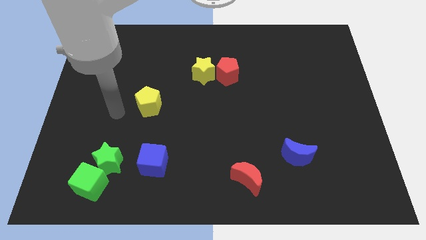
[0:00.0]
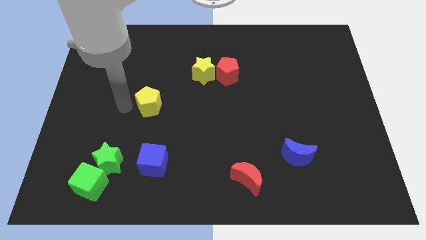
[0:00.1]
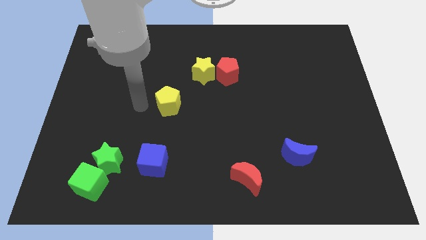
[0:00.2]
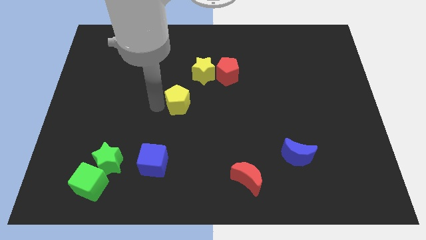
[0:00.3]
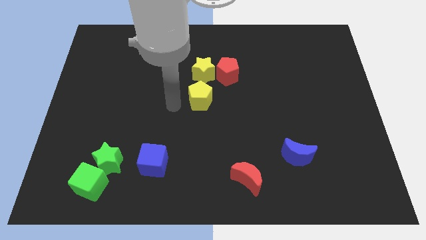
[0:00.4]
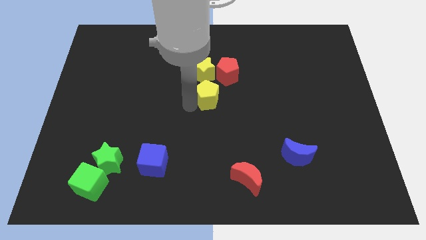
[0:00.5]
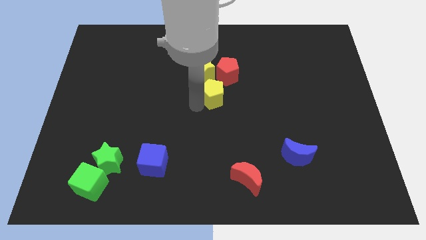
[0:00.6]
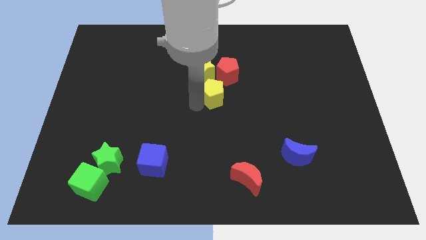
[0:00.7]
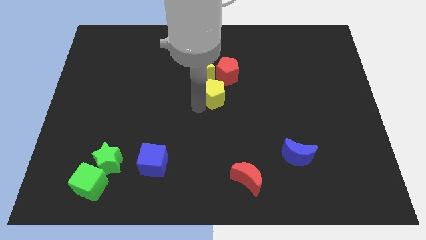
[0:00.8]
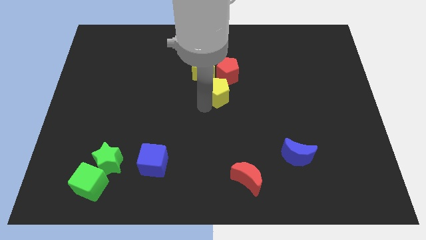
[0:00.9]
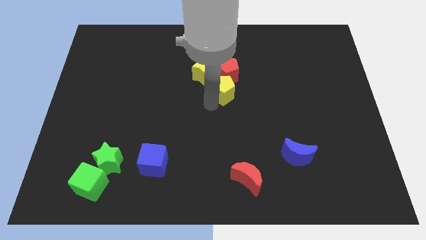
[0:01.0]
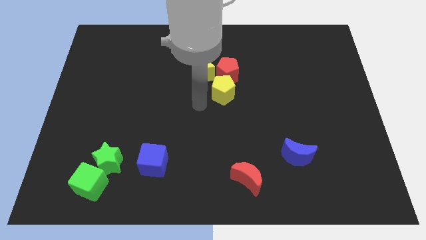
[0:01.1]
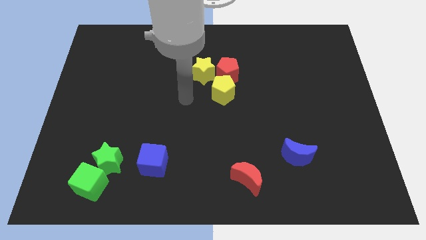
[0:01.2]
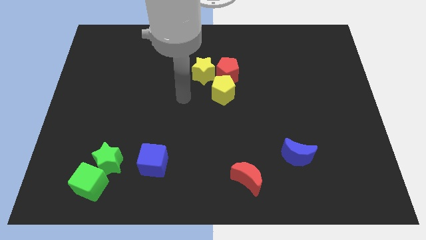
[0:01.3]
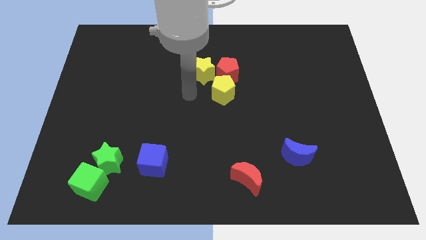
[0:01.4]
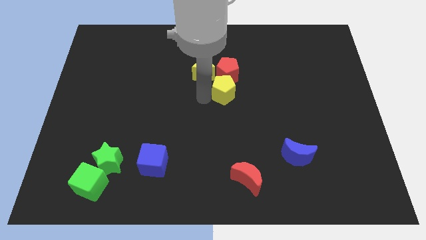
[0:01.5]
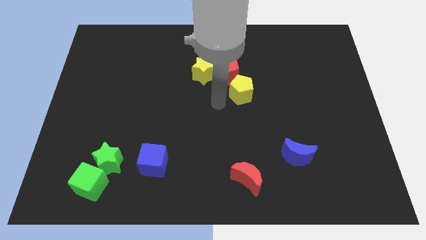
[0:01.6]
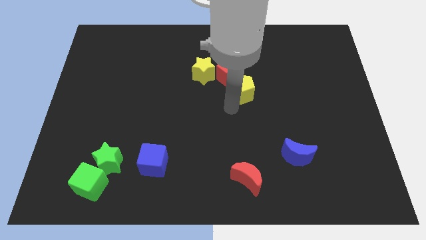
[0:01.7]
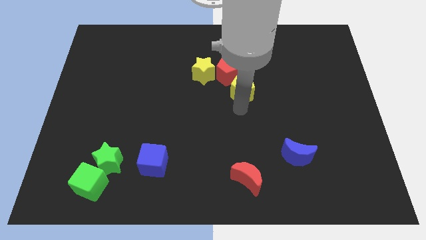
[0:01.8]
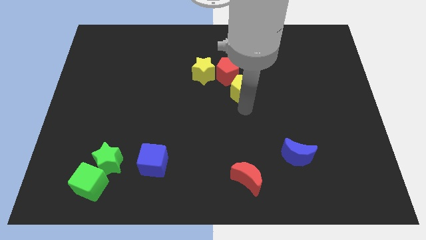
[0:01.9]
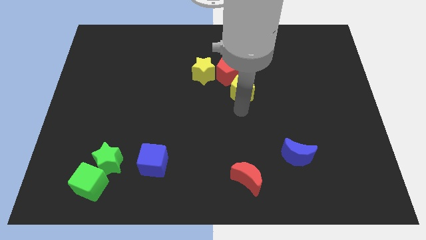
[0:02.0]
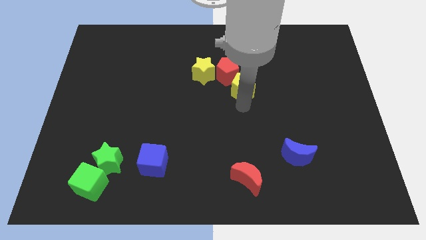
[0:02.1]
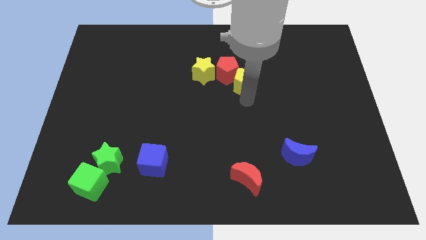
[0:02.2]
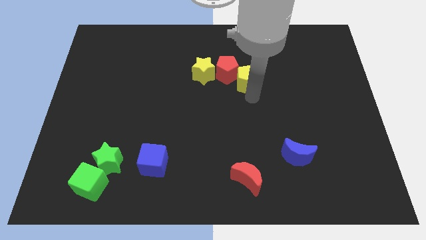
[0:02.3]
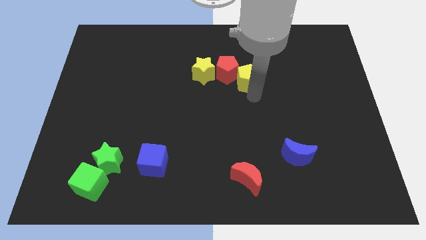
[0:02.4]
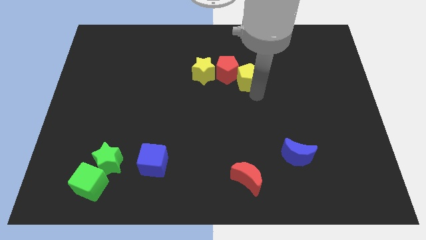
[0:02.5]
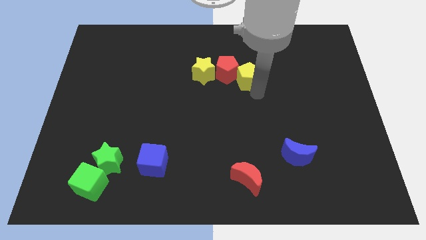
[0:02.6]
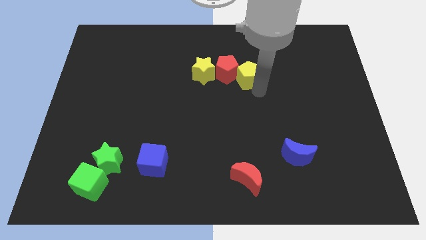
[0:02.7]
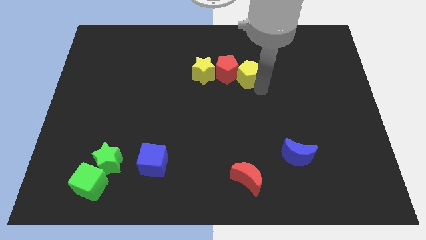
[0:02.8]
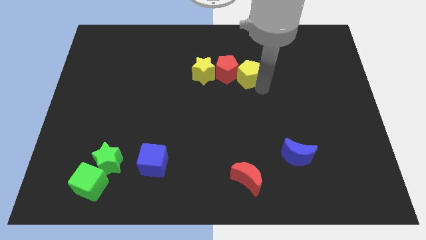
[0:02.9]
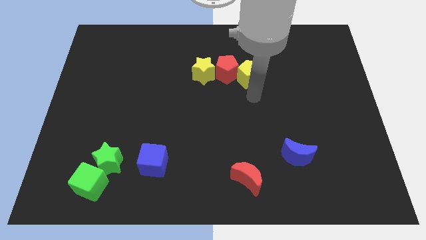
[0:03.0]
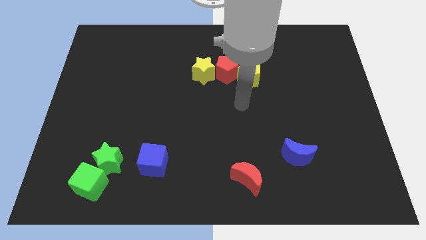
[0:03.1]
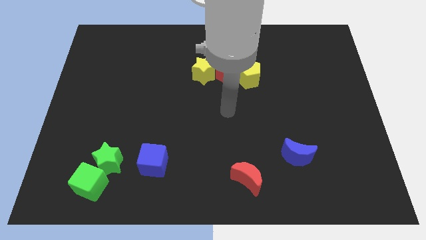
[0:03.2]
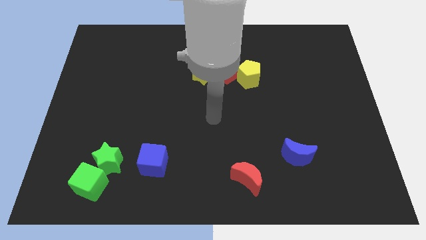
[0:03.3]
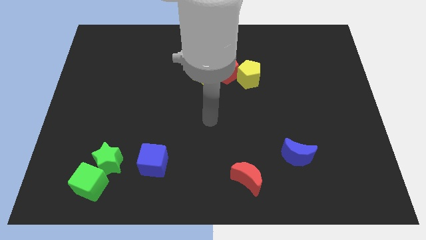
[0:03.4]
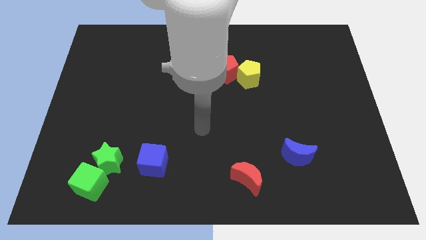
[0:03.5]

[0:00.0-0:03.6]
place the yellow pentagon beside to the red pentagon

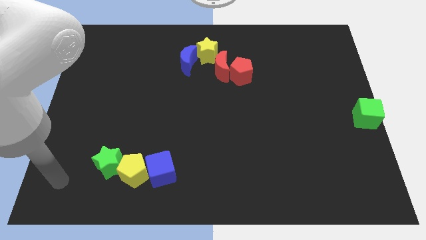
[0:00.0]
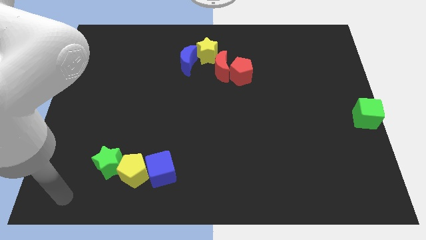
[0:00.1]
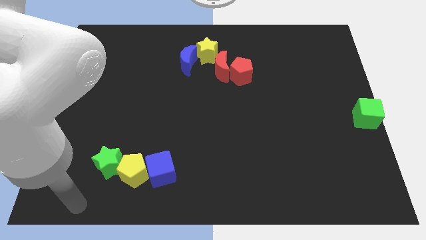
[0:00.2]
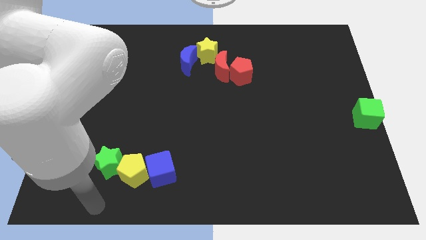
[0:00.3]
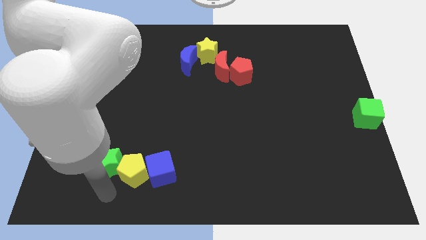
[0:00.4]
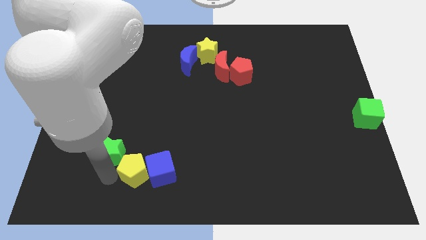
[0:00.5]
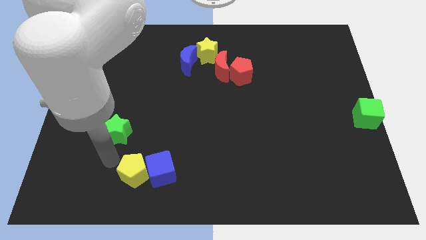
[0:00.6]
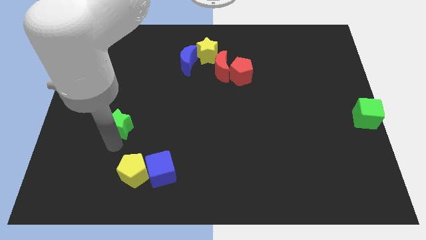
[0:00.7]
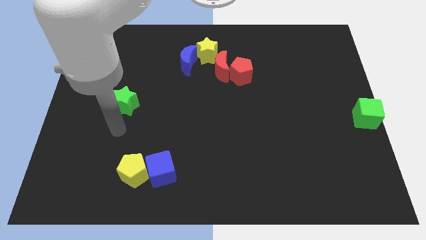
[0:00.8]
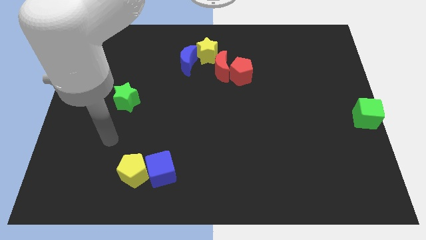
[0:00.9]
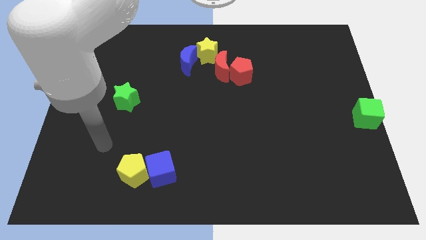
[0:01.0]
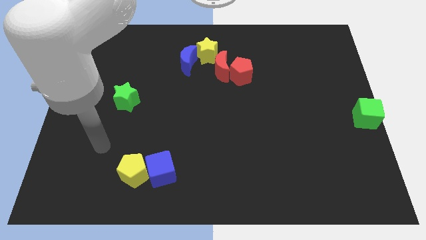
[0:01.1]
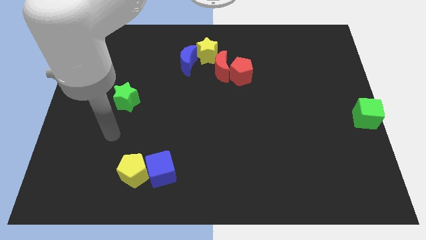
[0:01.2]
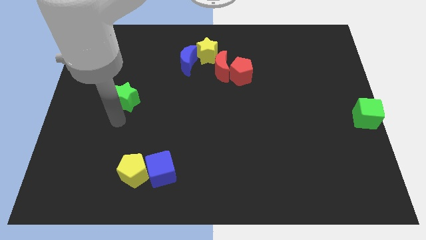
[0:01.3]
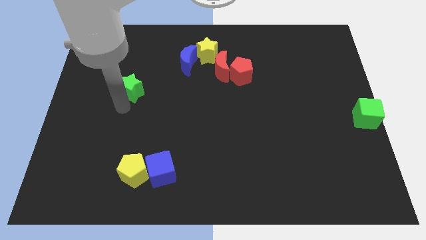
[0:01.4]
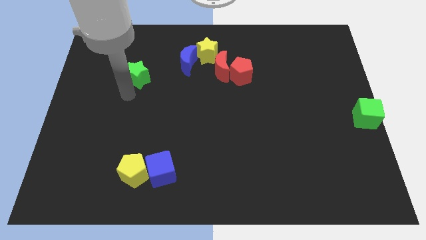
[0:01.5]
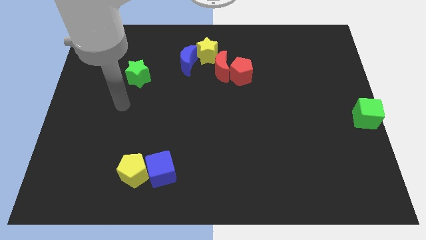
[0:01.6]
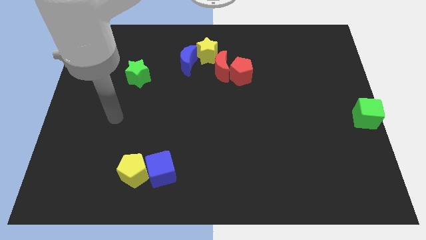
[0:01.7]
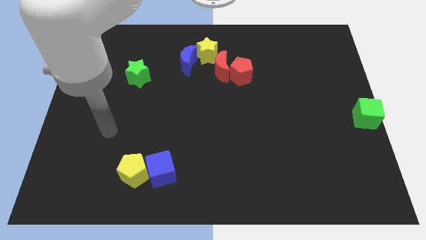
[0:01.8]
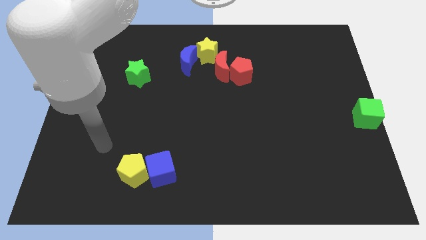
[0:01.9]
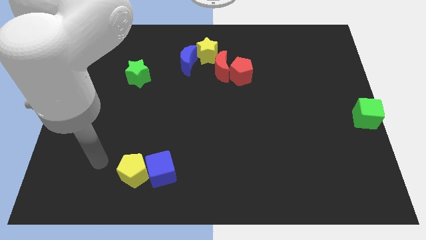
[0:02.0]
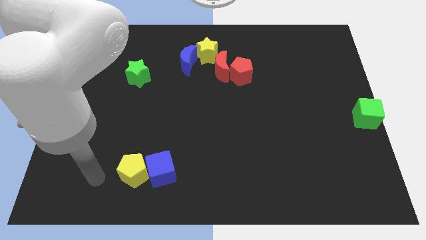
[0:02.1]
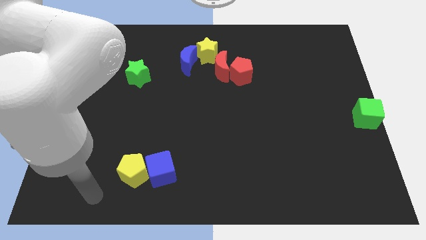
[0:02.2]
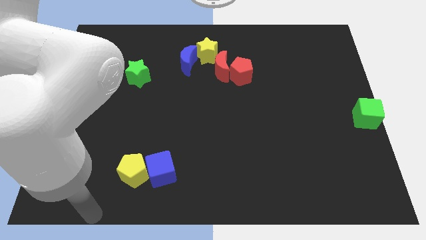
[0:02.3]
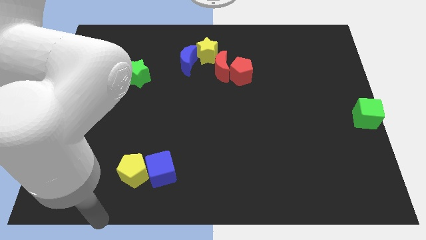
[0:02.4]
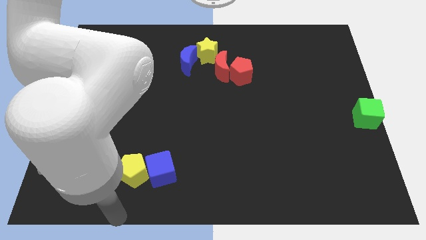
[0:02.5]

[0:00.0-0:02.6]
push the green star towards the top

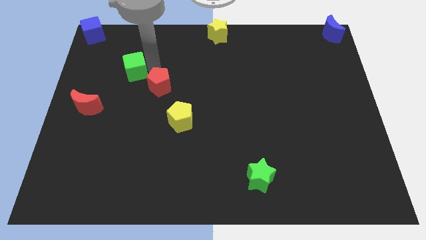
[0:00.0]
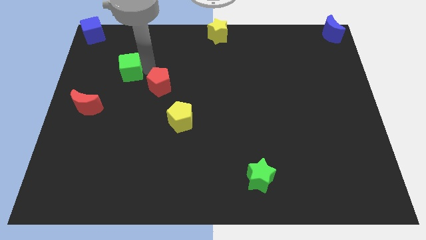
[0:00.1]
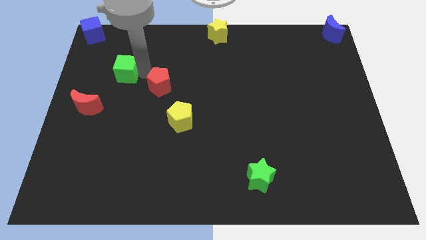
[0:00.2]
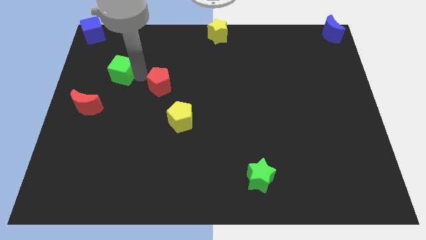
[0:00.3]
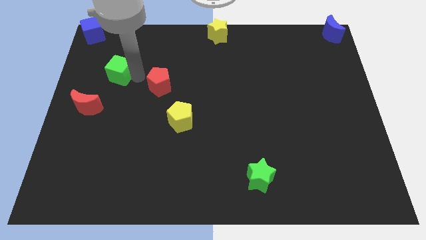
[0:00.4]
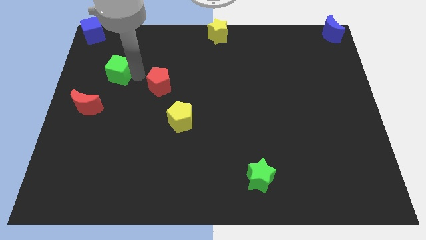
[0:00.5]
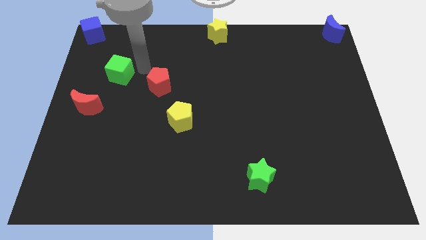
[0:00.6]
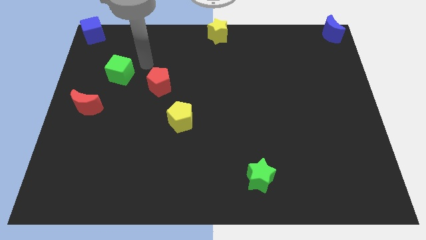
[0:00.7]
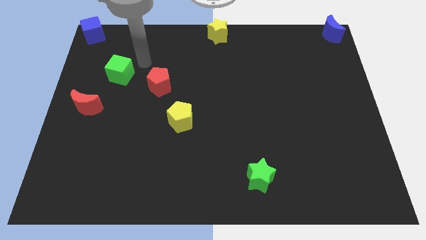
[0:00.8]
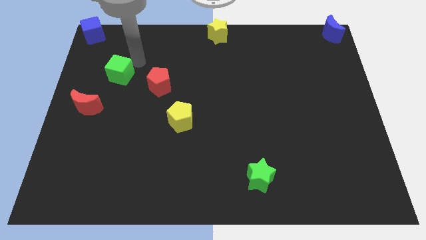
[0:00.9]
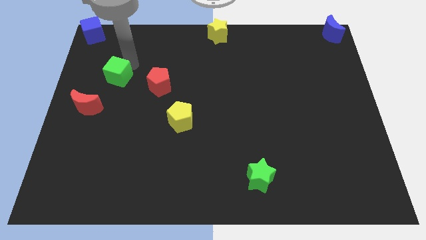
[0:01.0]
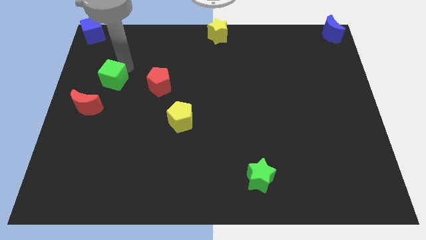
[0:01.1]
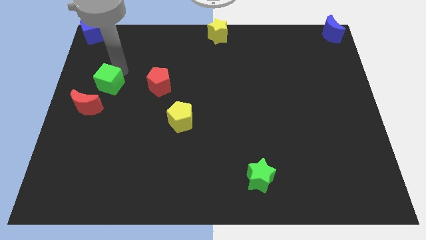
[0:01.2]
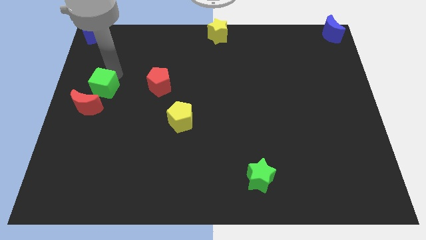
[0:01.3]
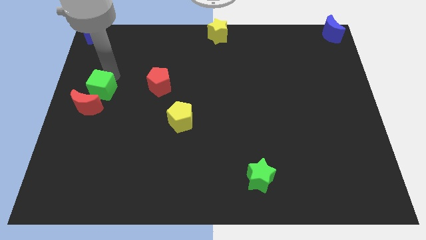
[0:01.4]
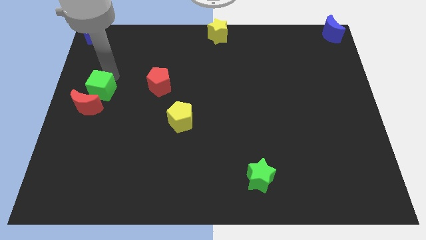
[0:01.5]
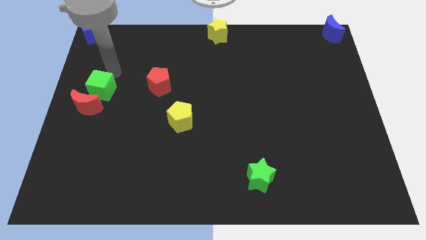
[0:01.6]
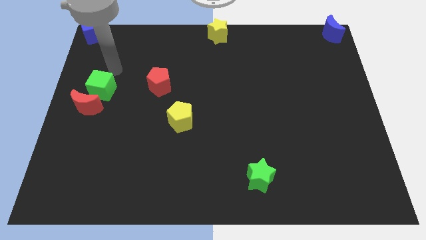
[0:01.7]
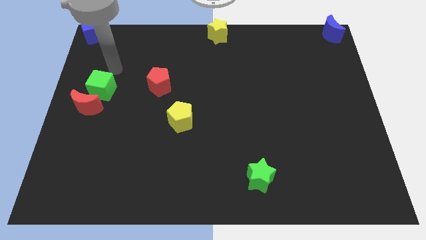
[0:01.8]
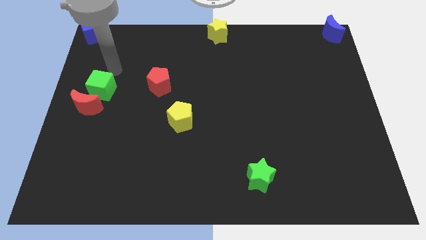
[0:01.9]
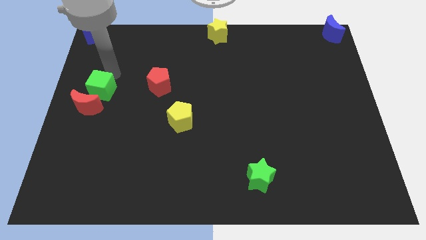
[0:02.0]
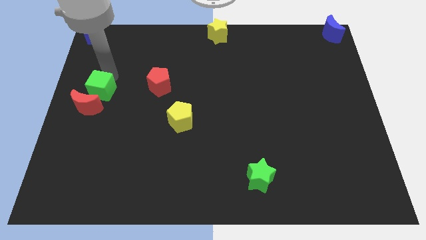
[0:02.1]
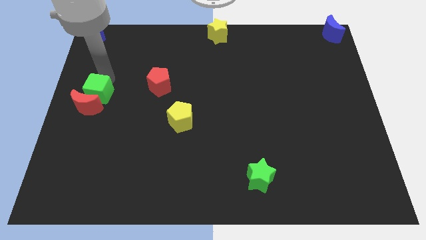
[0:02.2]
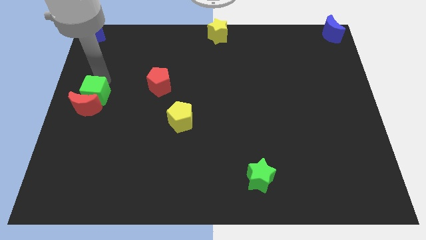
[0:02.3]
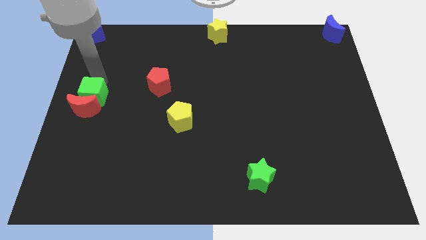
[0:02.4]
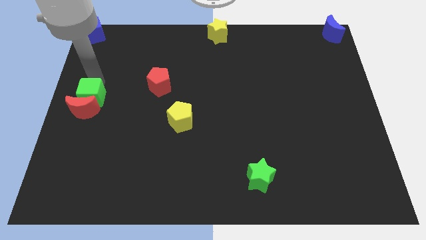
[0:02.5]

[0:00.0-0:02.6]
push the green cube into the red crescent

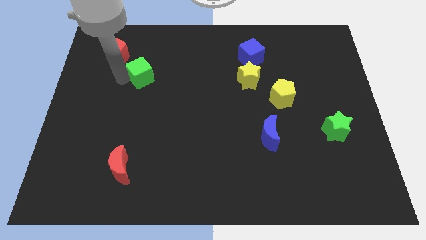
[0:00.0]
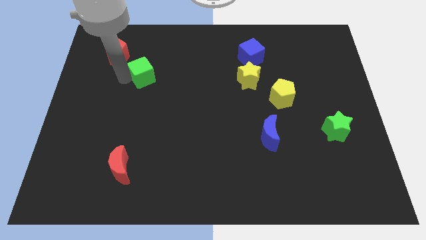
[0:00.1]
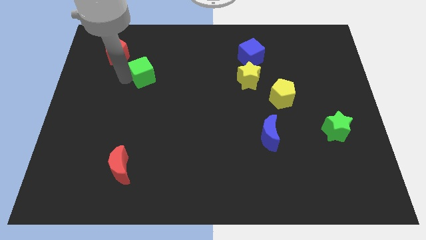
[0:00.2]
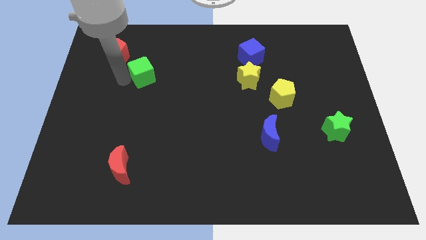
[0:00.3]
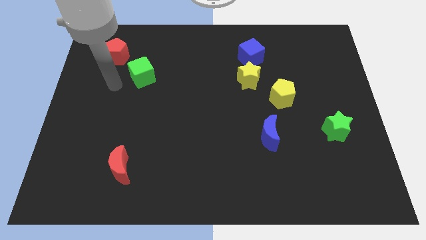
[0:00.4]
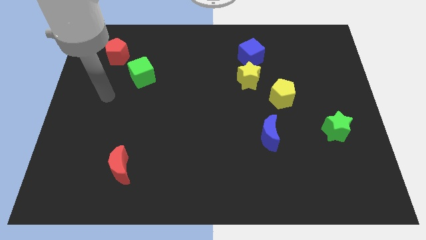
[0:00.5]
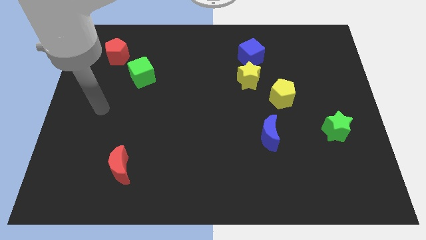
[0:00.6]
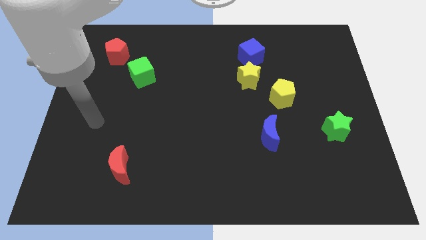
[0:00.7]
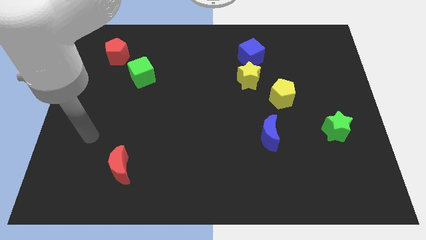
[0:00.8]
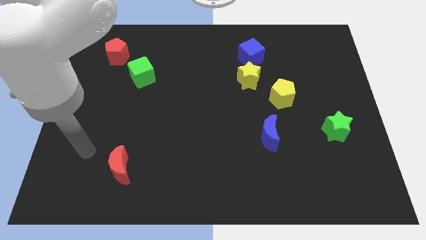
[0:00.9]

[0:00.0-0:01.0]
move your arm away from the green cube
